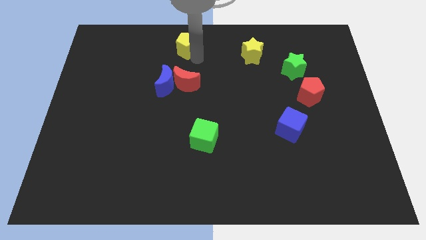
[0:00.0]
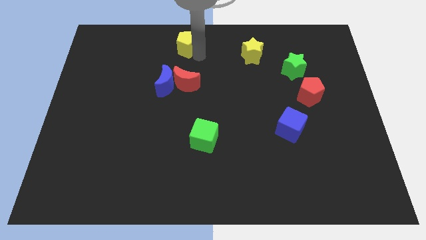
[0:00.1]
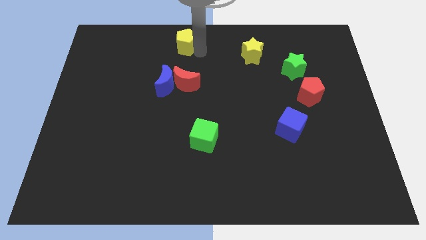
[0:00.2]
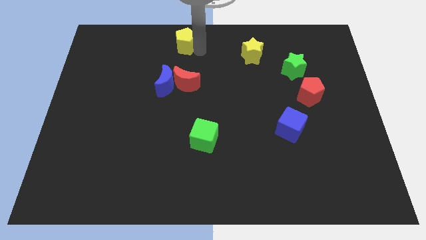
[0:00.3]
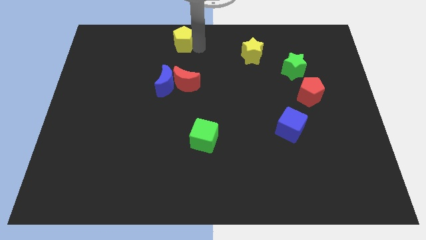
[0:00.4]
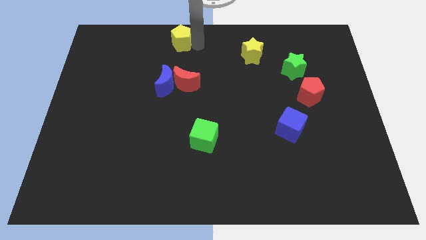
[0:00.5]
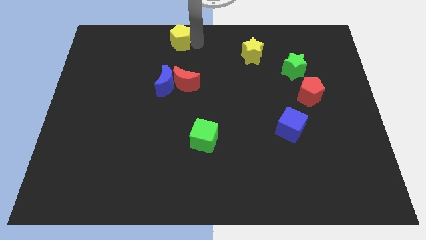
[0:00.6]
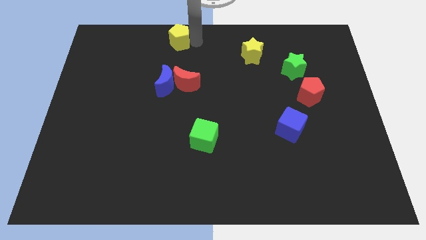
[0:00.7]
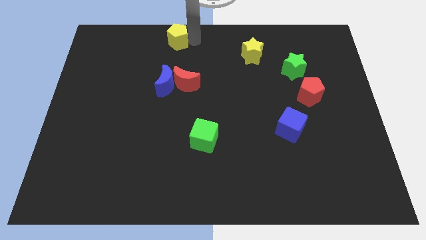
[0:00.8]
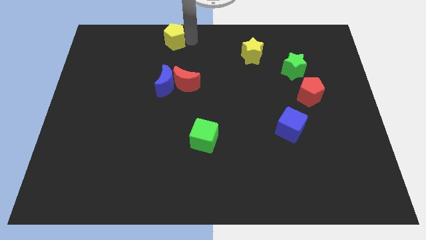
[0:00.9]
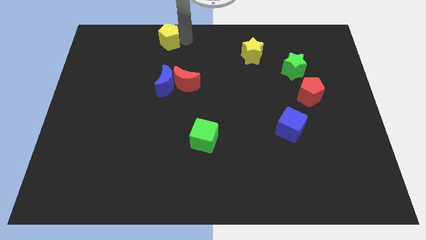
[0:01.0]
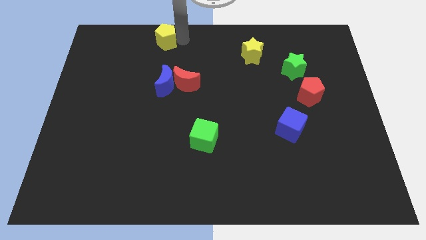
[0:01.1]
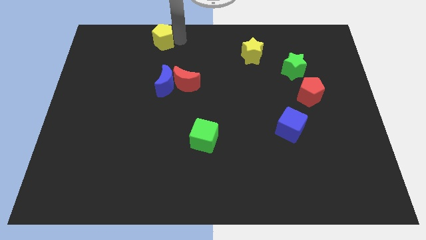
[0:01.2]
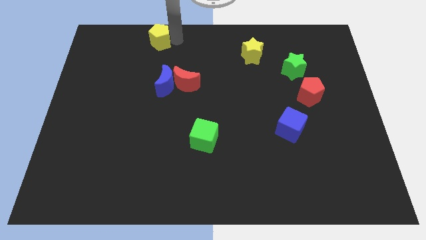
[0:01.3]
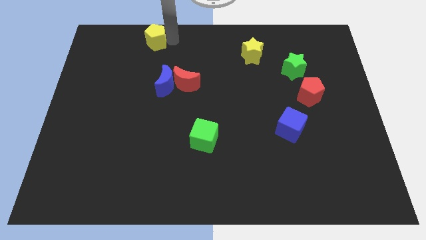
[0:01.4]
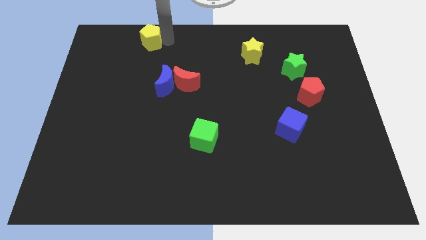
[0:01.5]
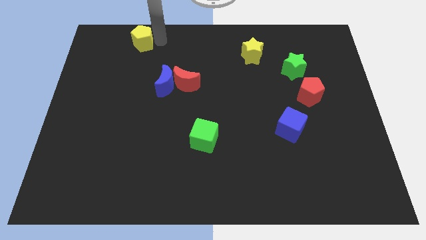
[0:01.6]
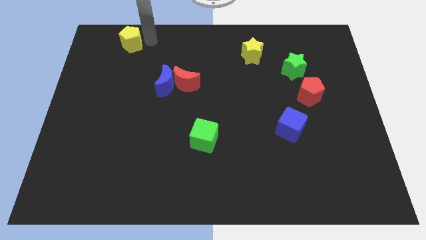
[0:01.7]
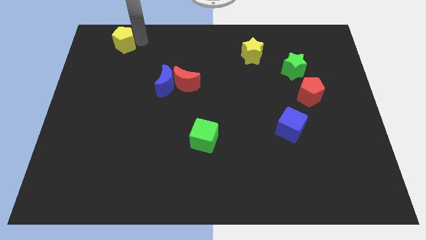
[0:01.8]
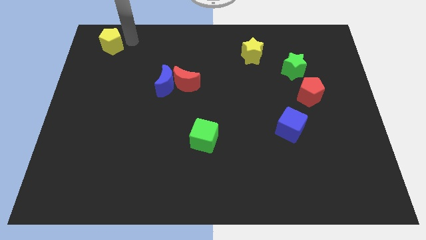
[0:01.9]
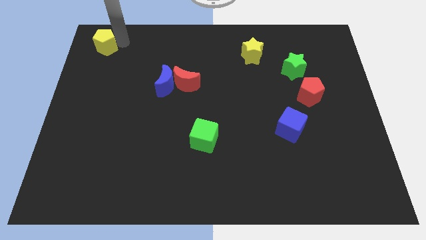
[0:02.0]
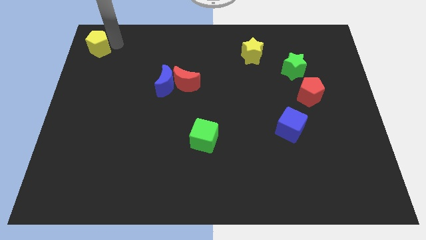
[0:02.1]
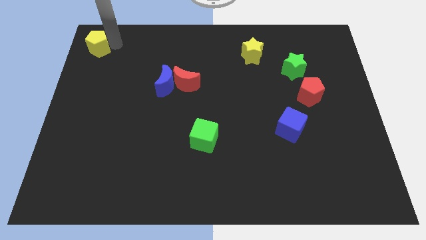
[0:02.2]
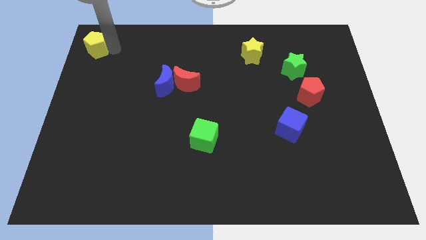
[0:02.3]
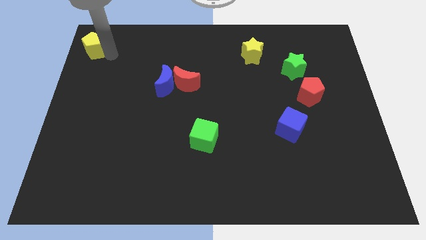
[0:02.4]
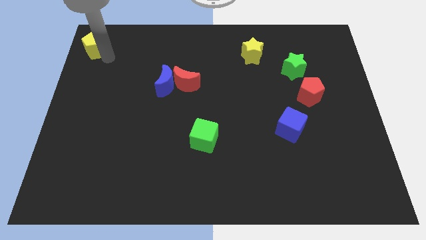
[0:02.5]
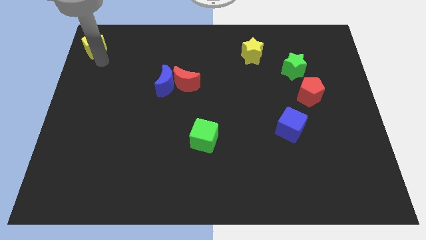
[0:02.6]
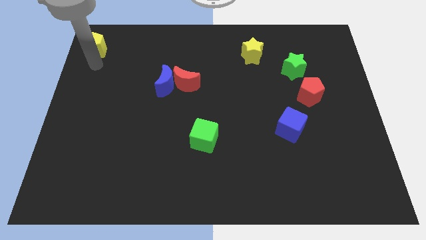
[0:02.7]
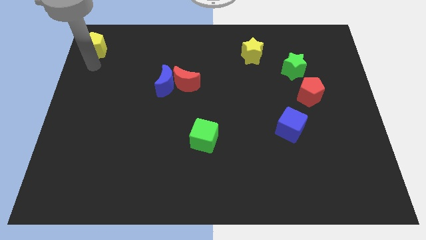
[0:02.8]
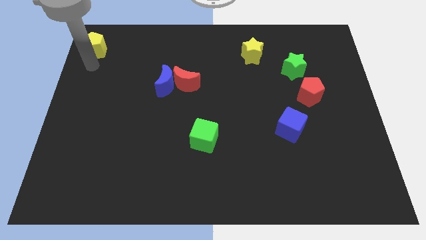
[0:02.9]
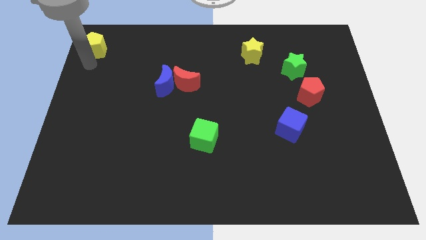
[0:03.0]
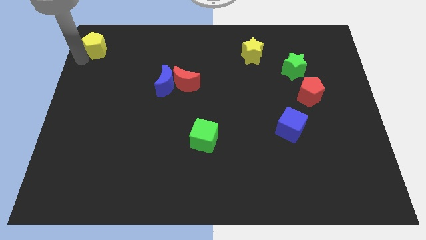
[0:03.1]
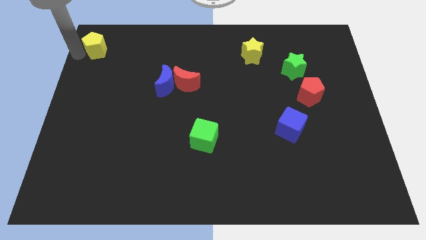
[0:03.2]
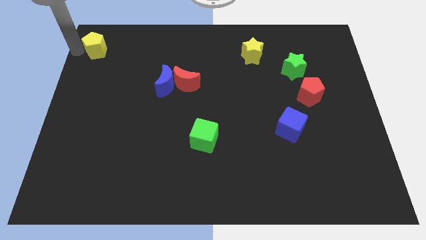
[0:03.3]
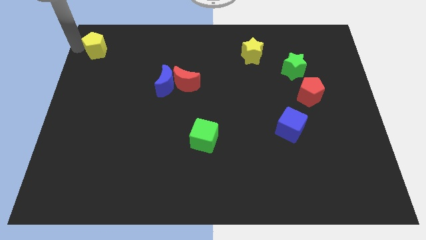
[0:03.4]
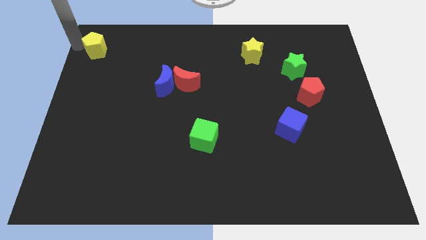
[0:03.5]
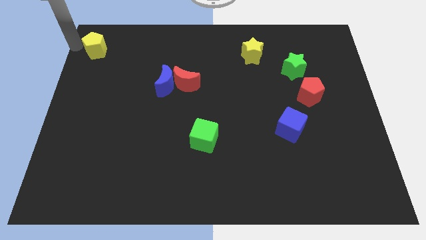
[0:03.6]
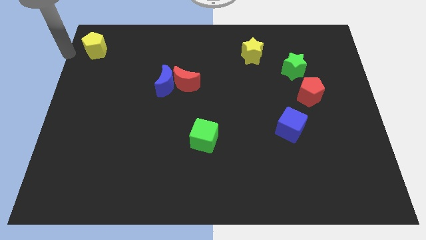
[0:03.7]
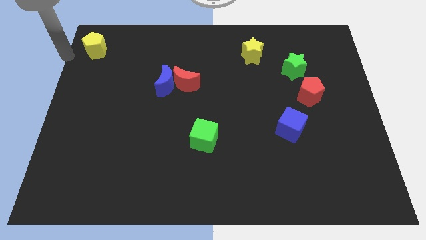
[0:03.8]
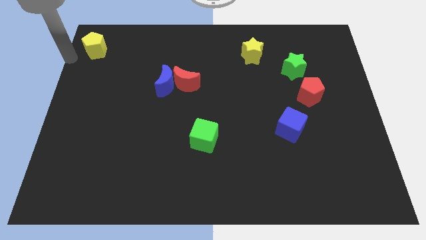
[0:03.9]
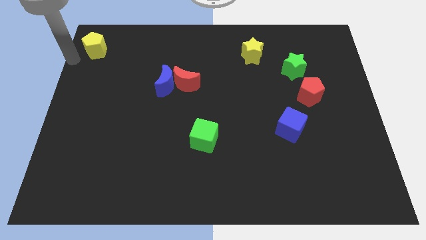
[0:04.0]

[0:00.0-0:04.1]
place the yellow pentagon on the top left corner

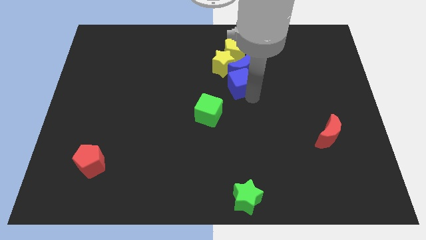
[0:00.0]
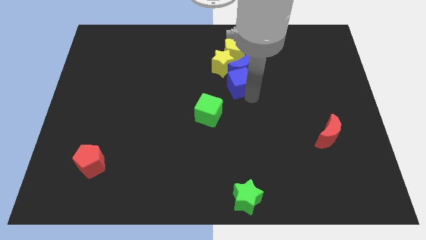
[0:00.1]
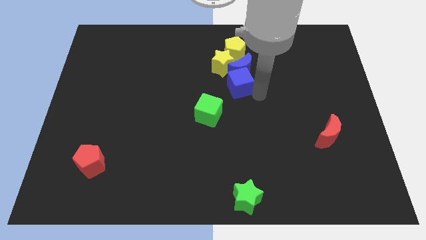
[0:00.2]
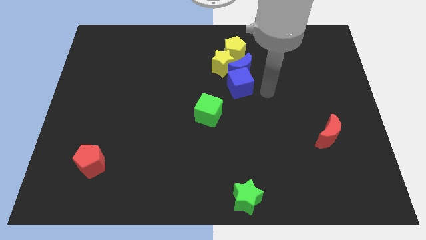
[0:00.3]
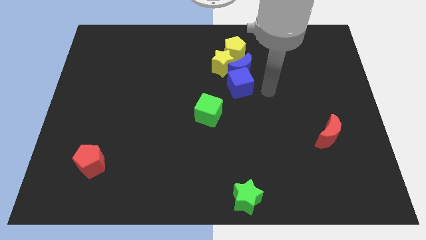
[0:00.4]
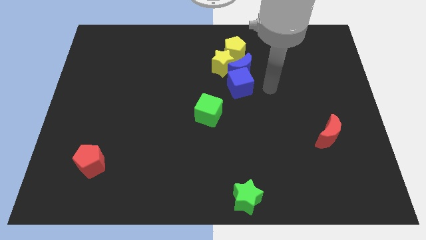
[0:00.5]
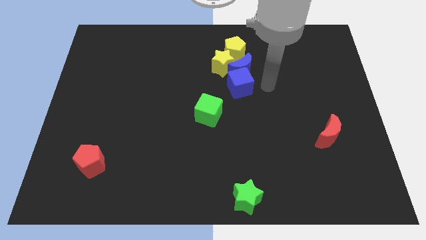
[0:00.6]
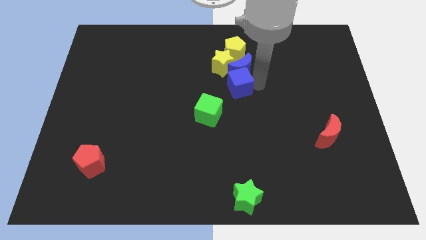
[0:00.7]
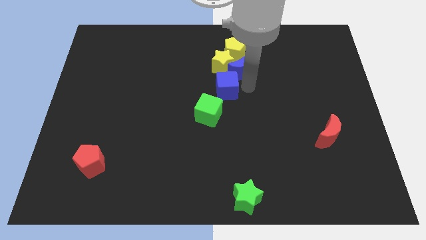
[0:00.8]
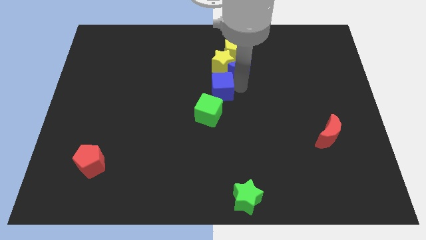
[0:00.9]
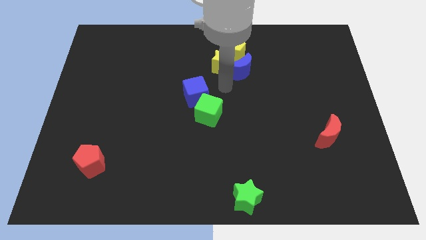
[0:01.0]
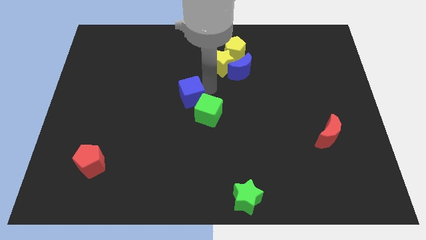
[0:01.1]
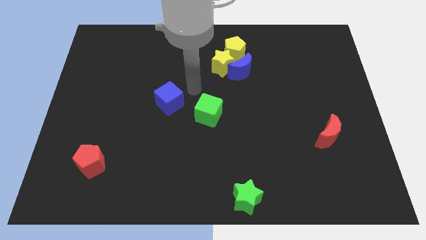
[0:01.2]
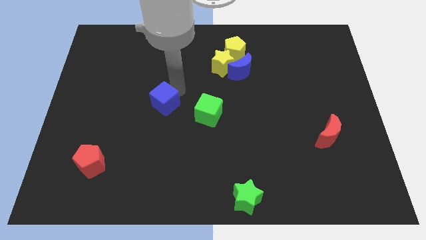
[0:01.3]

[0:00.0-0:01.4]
push the blue cube towards the left side of the board

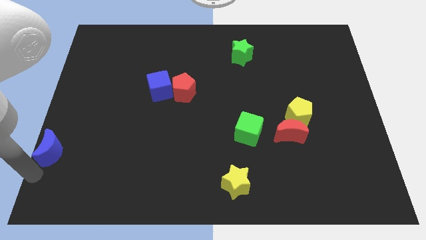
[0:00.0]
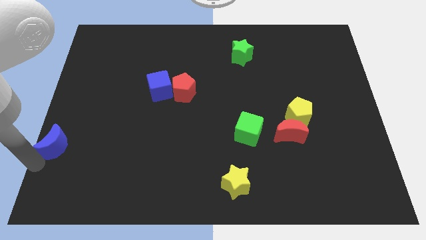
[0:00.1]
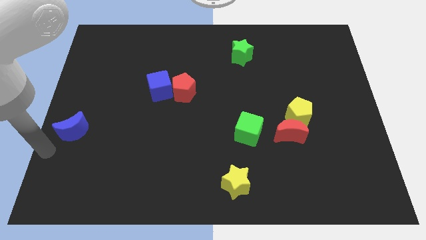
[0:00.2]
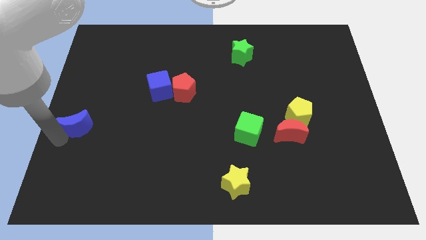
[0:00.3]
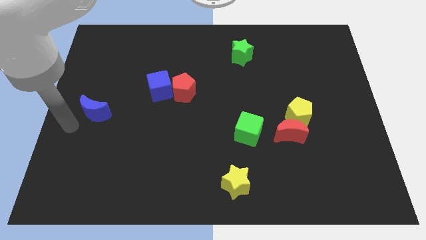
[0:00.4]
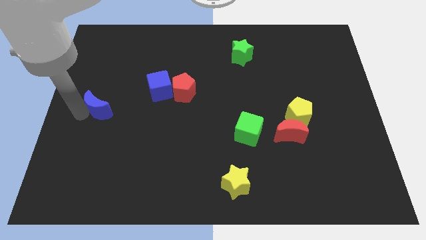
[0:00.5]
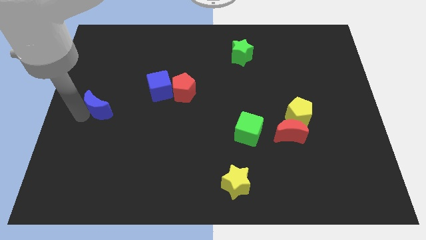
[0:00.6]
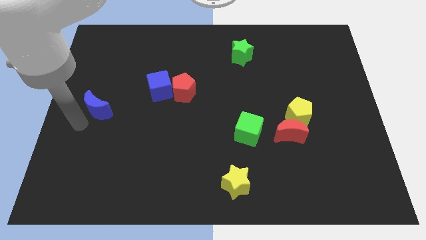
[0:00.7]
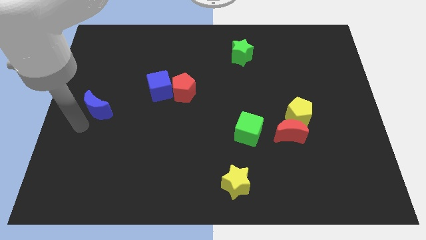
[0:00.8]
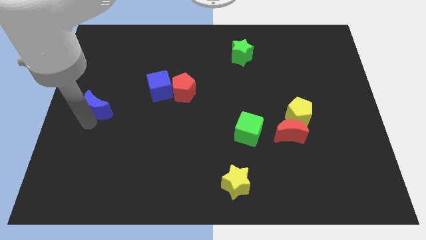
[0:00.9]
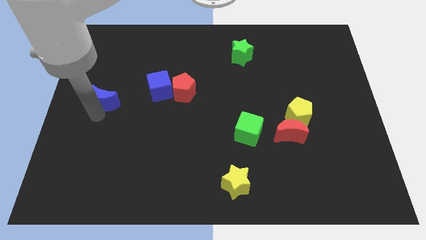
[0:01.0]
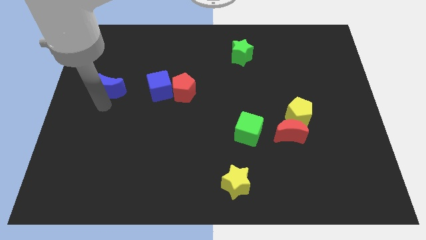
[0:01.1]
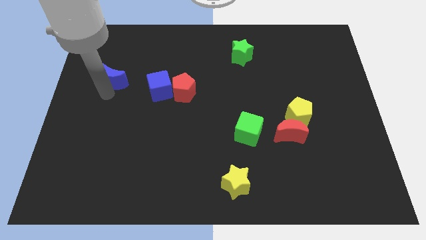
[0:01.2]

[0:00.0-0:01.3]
place blue moon diagonal to the left of blue cube

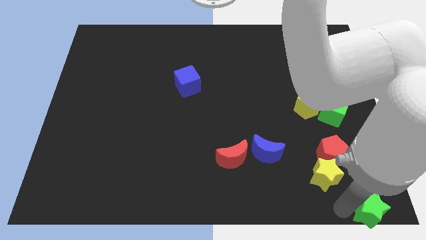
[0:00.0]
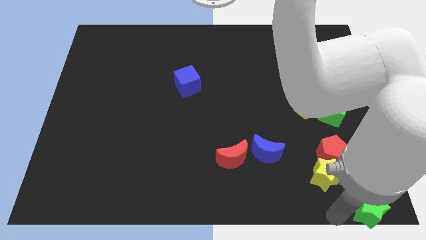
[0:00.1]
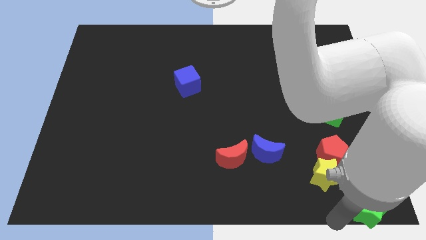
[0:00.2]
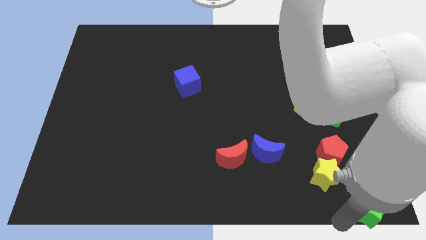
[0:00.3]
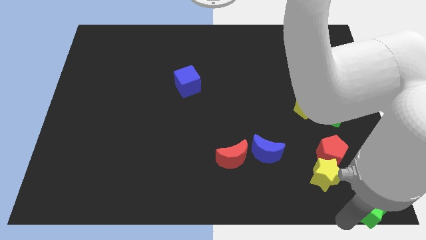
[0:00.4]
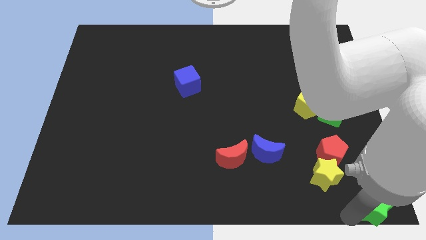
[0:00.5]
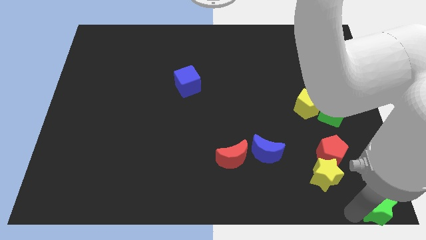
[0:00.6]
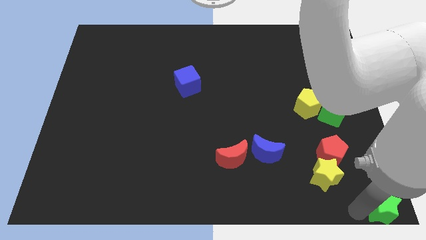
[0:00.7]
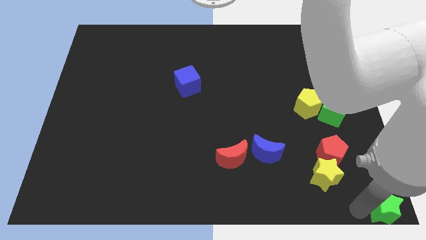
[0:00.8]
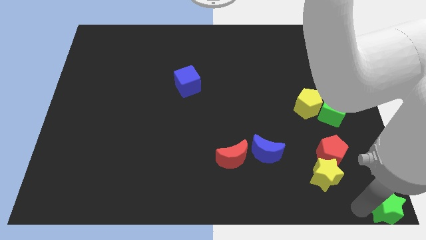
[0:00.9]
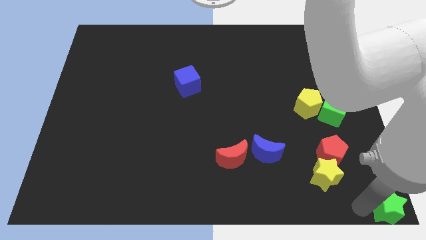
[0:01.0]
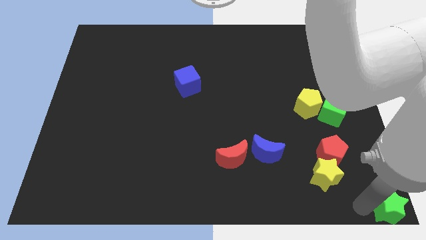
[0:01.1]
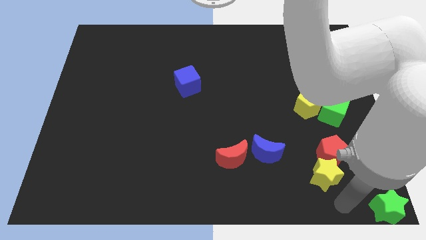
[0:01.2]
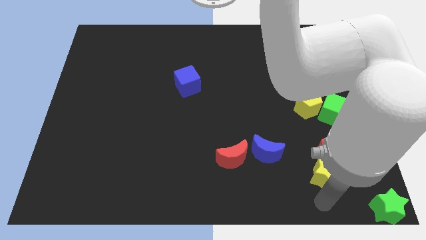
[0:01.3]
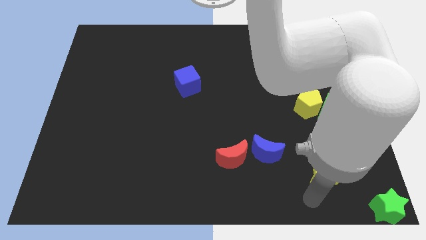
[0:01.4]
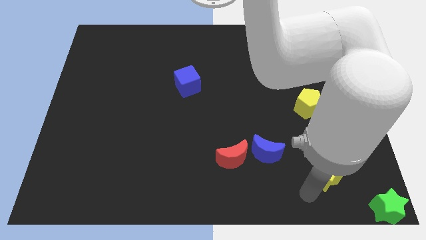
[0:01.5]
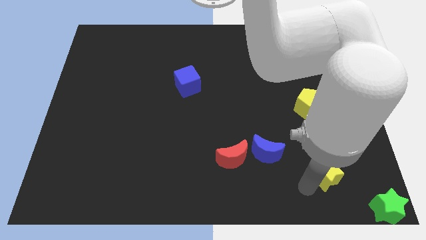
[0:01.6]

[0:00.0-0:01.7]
move the green star to the bottom right

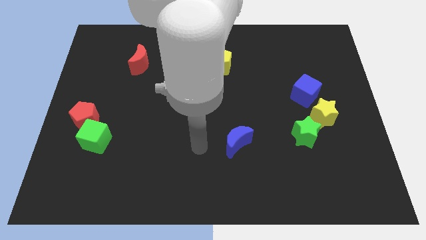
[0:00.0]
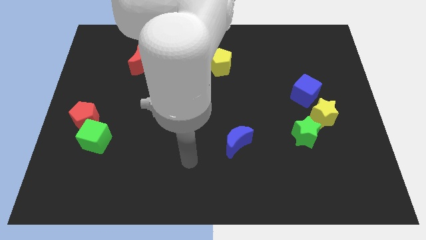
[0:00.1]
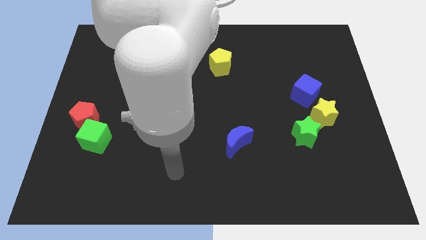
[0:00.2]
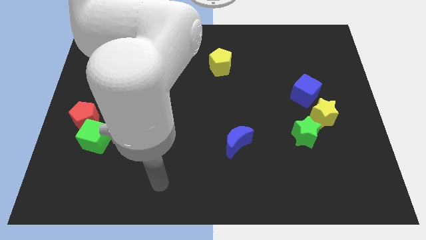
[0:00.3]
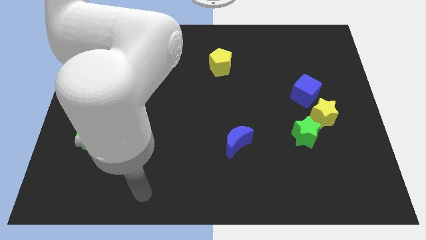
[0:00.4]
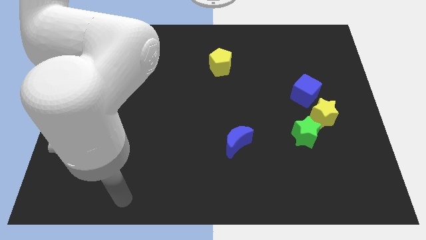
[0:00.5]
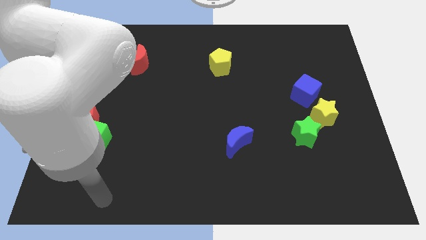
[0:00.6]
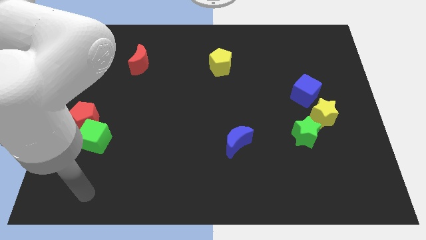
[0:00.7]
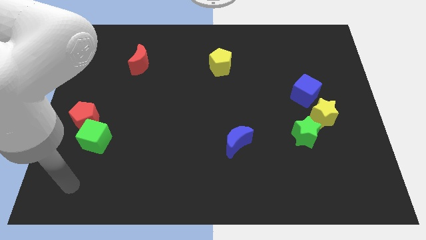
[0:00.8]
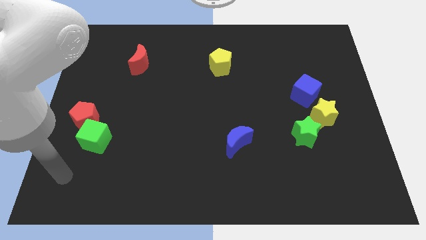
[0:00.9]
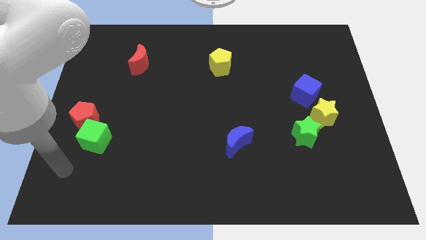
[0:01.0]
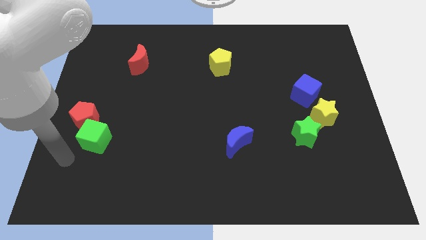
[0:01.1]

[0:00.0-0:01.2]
move the arm towards the green cube
